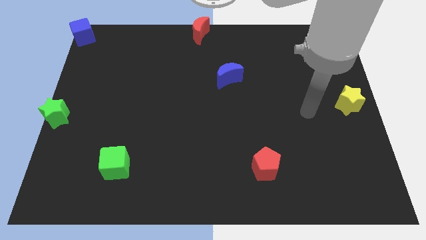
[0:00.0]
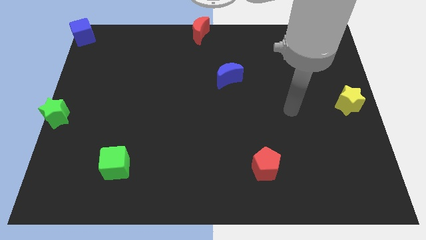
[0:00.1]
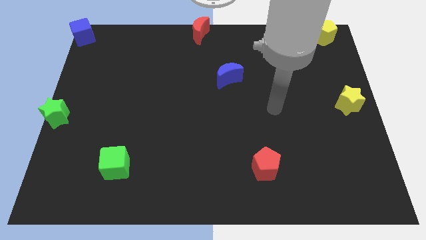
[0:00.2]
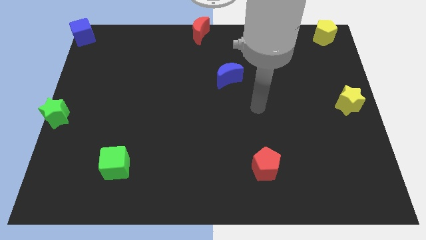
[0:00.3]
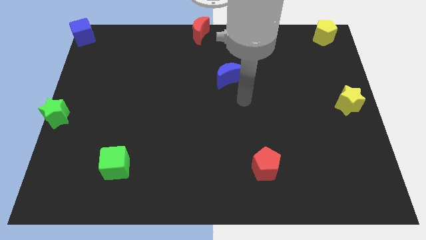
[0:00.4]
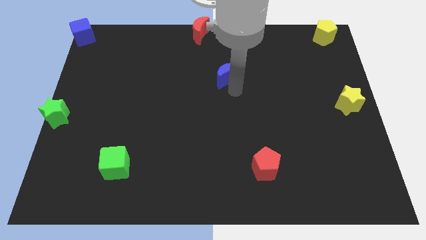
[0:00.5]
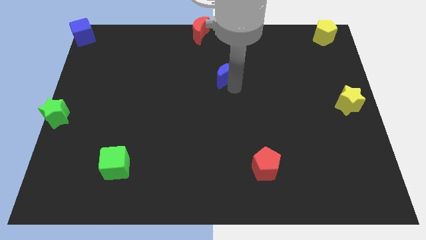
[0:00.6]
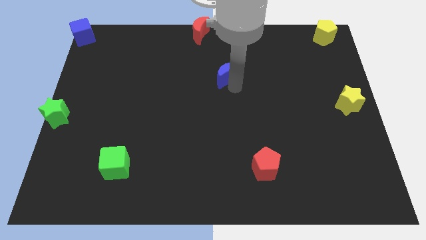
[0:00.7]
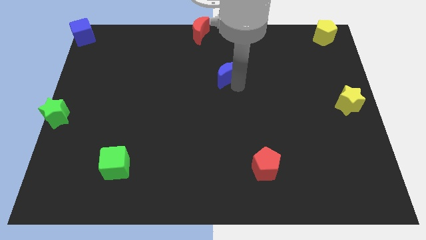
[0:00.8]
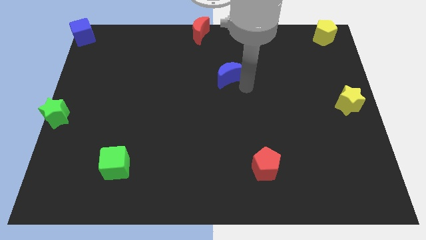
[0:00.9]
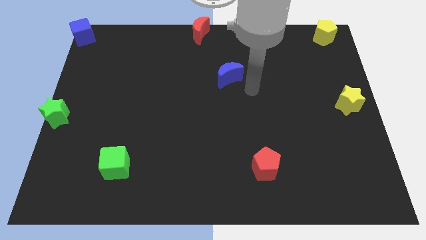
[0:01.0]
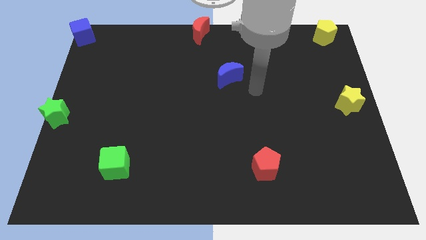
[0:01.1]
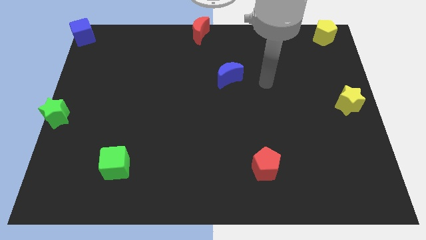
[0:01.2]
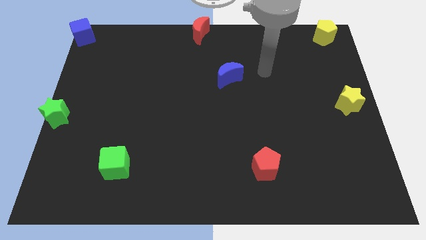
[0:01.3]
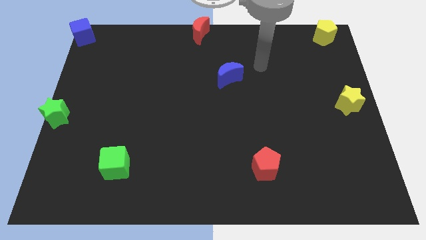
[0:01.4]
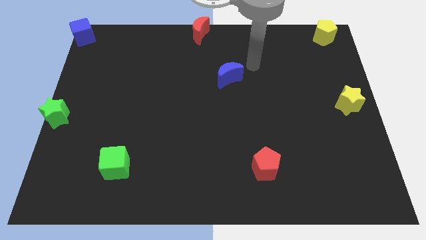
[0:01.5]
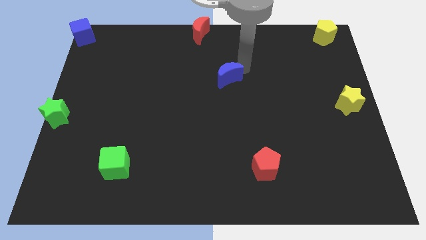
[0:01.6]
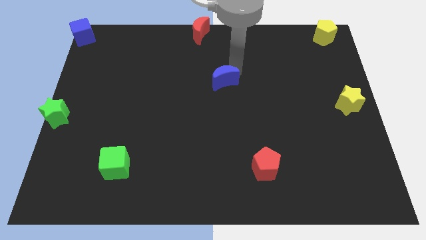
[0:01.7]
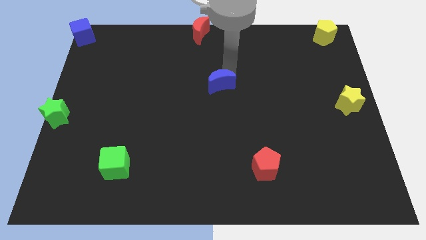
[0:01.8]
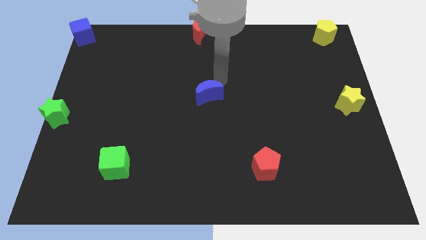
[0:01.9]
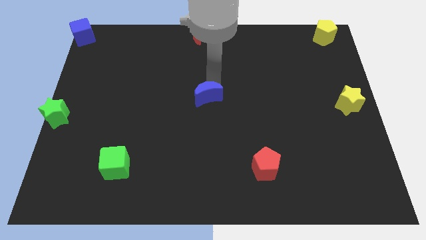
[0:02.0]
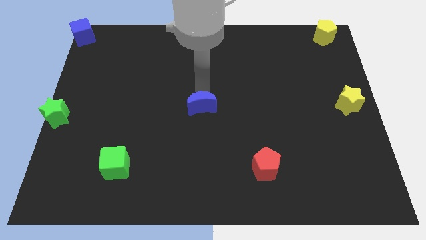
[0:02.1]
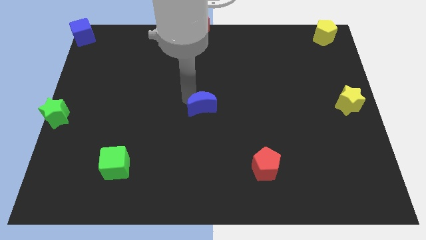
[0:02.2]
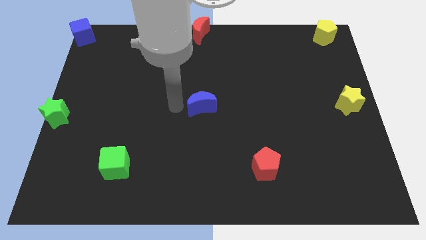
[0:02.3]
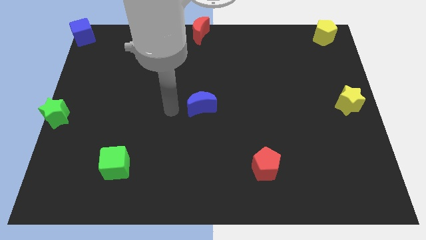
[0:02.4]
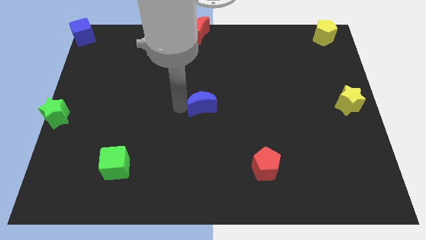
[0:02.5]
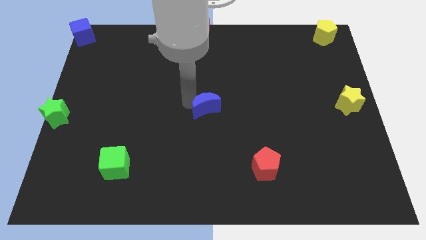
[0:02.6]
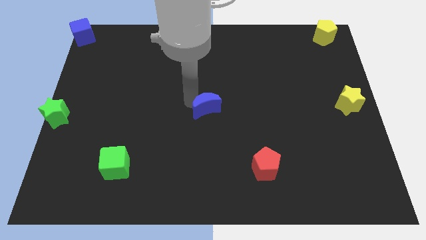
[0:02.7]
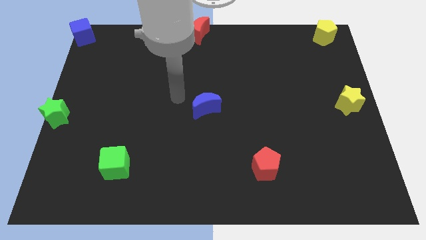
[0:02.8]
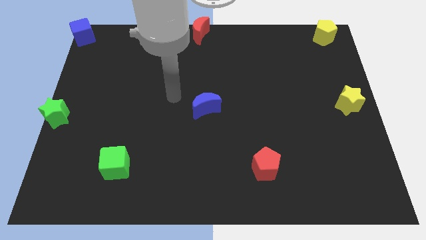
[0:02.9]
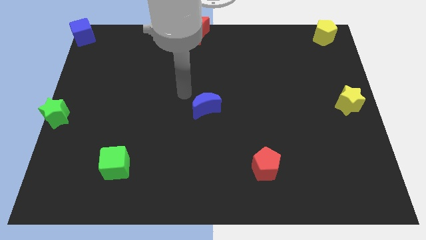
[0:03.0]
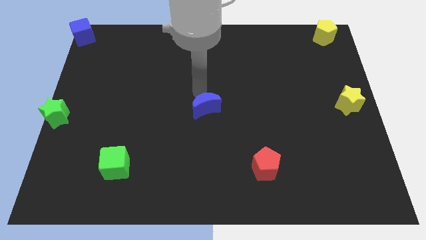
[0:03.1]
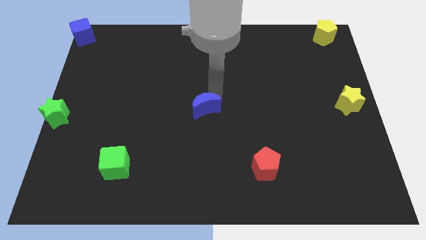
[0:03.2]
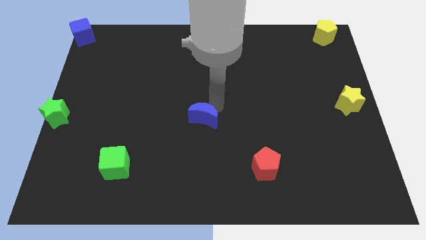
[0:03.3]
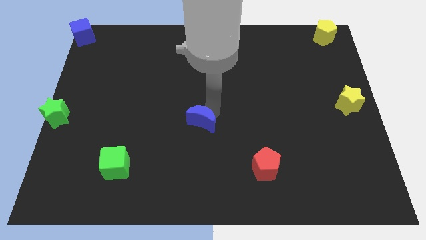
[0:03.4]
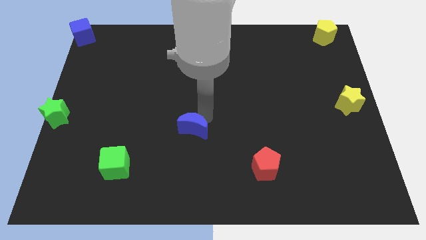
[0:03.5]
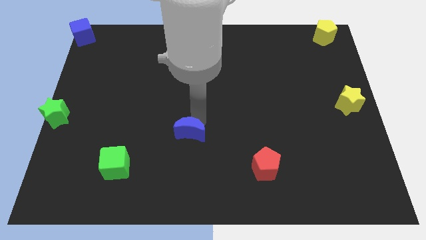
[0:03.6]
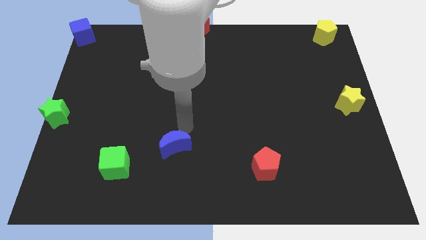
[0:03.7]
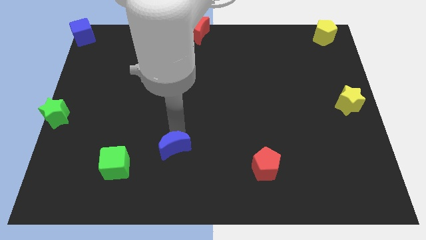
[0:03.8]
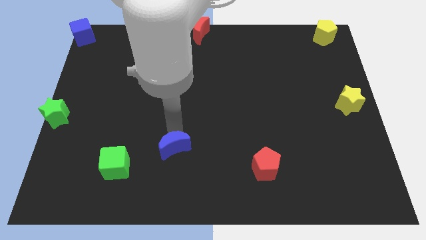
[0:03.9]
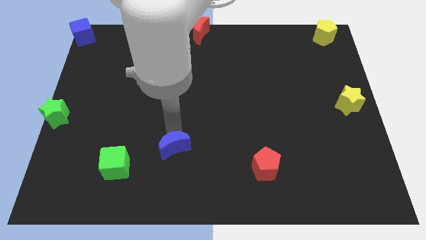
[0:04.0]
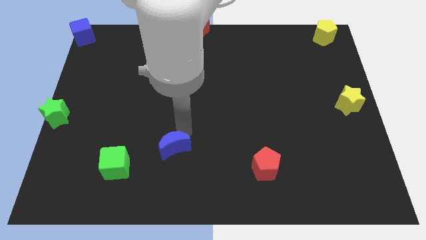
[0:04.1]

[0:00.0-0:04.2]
move the blue moon diagonally to the top right of the green cube

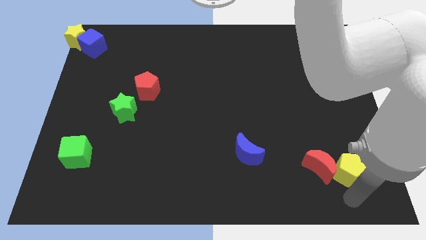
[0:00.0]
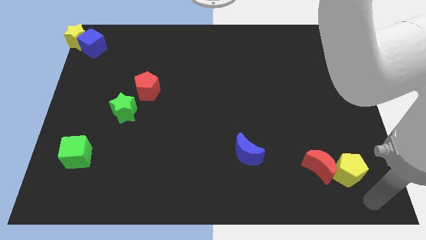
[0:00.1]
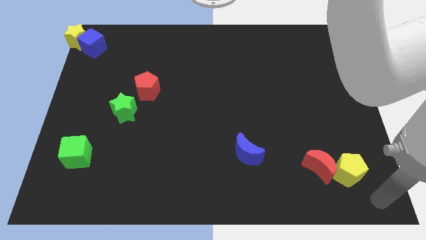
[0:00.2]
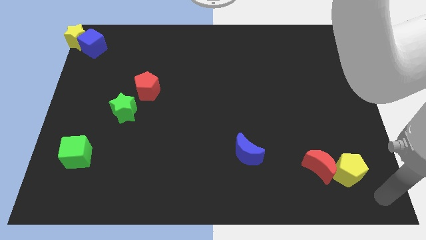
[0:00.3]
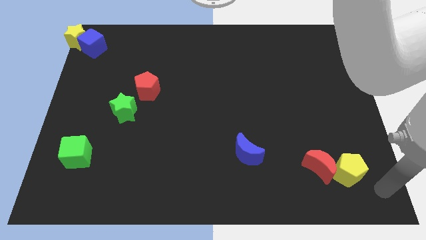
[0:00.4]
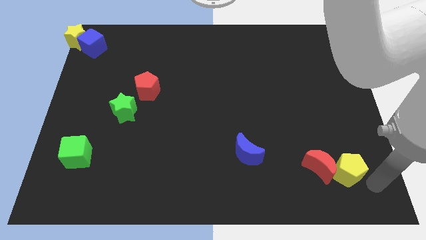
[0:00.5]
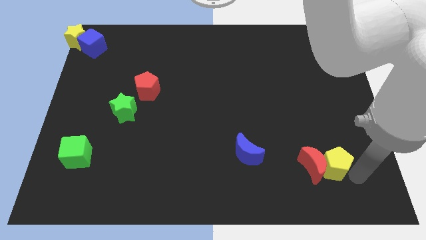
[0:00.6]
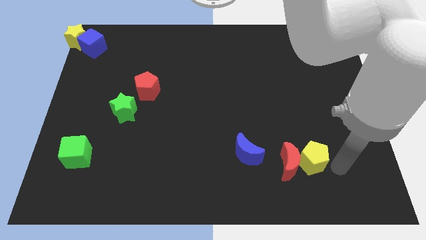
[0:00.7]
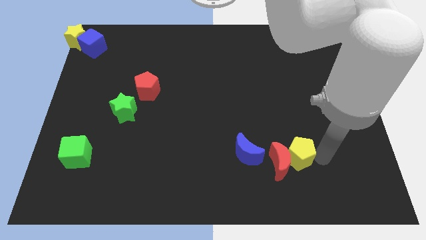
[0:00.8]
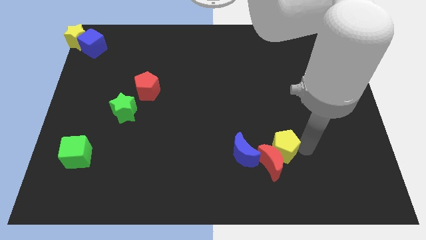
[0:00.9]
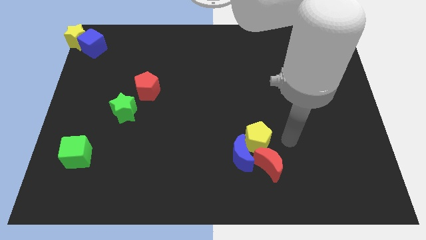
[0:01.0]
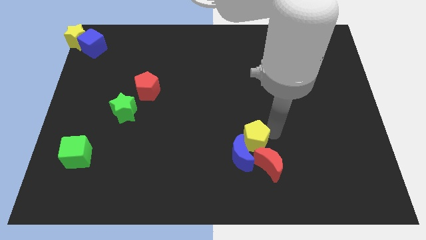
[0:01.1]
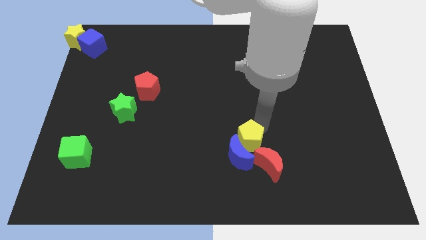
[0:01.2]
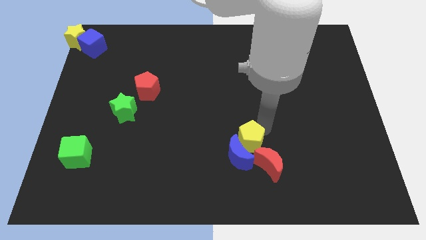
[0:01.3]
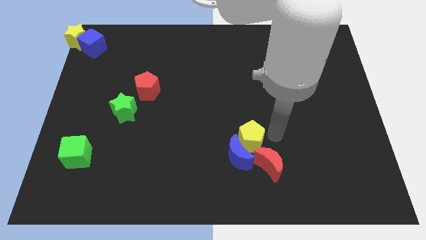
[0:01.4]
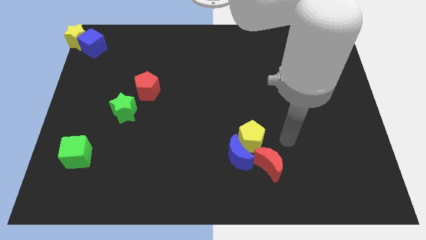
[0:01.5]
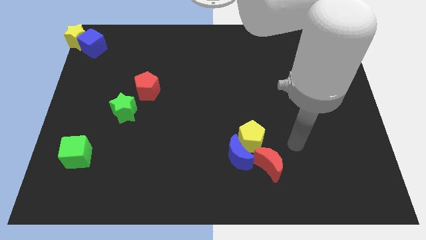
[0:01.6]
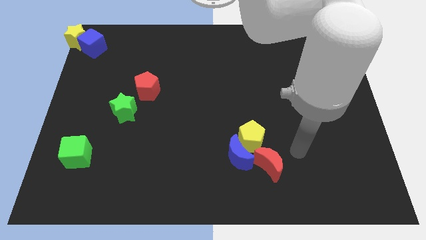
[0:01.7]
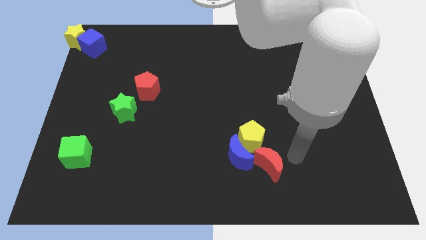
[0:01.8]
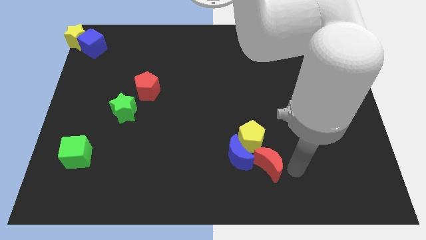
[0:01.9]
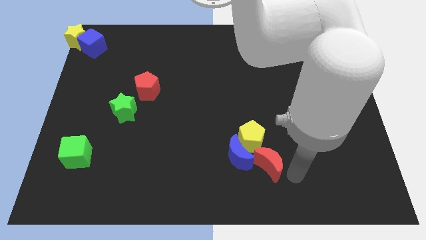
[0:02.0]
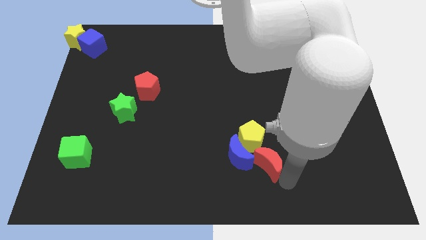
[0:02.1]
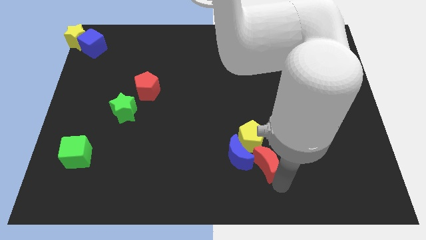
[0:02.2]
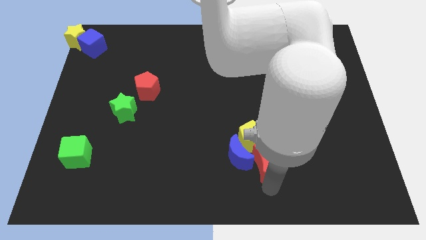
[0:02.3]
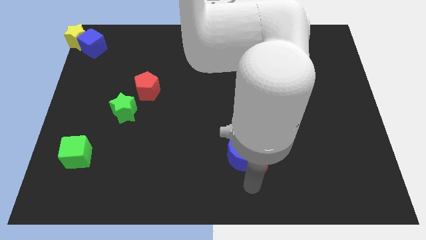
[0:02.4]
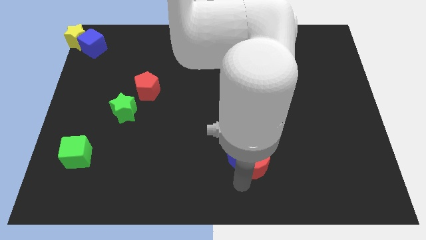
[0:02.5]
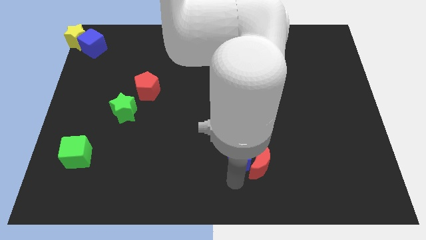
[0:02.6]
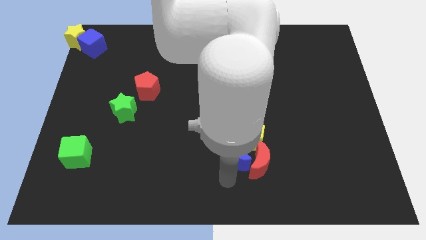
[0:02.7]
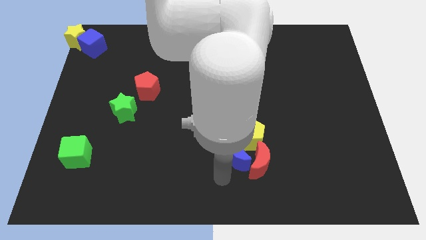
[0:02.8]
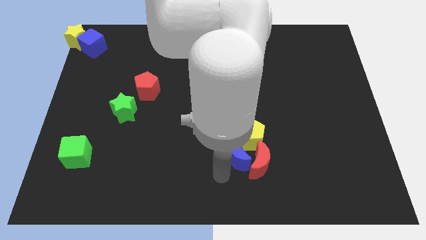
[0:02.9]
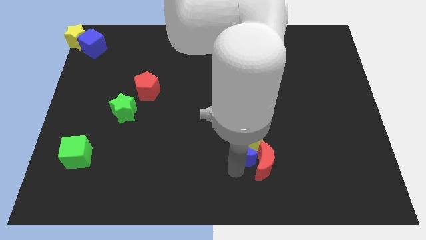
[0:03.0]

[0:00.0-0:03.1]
move the red crescent and the yellow pentagon into the blue crescent

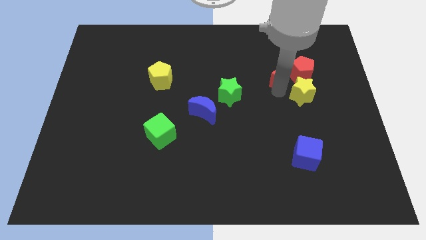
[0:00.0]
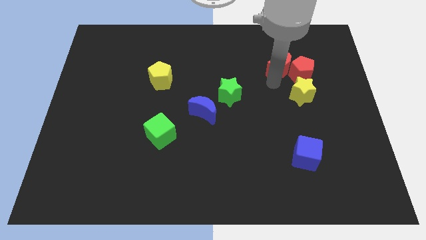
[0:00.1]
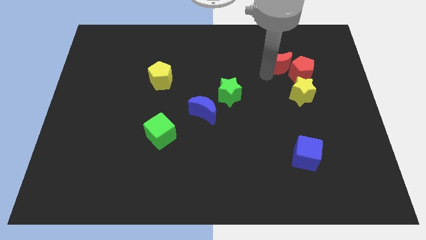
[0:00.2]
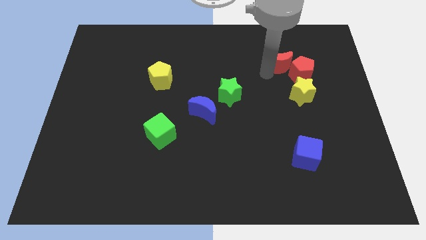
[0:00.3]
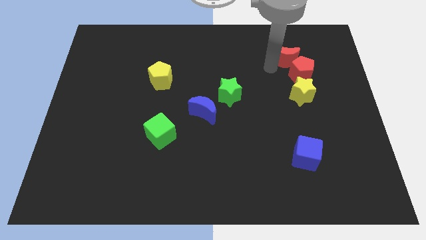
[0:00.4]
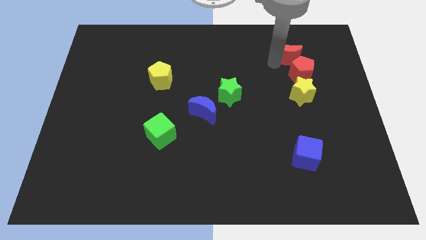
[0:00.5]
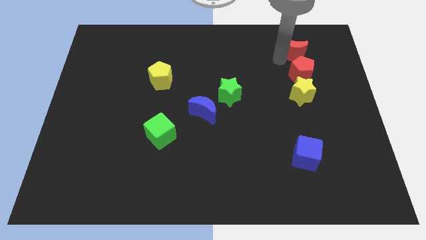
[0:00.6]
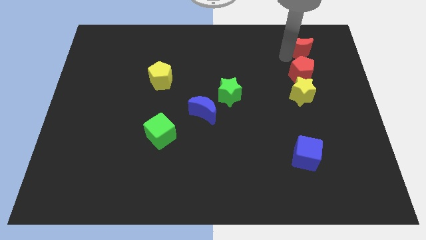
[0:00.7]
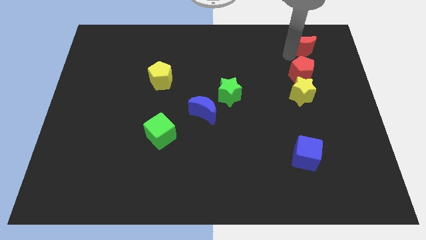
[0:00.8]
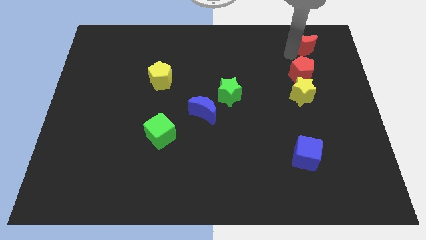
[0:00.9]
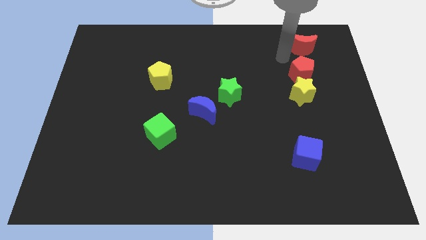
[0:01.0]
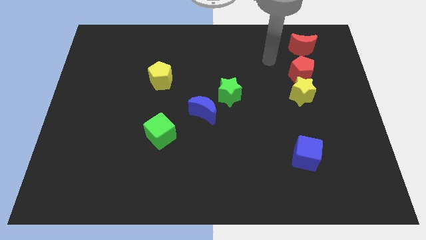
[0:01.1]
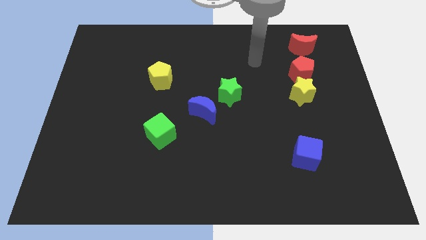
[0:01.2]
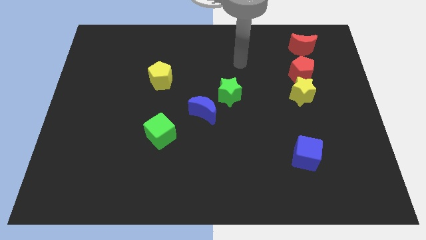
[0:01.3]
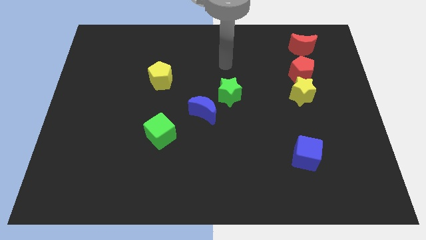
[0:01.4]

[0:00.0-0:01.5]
adjust the red moon on the top of the red pentagon
